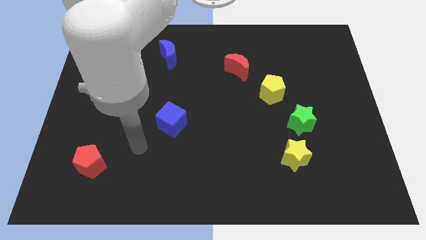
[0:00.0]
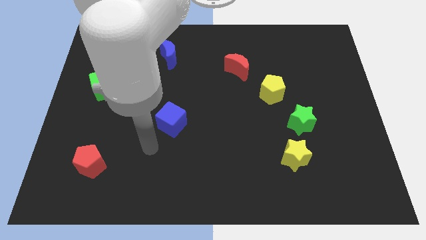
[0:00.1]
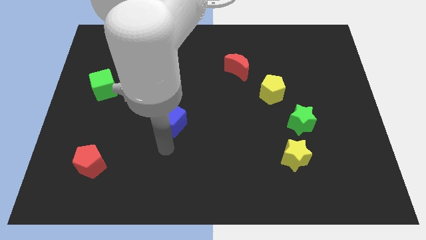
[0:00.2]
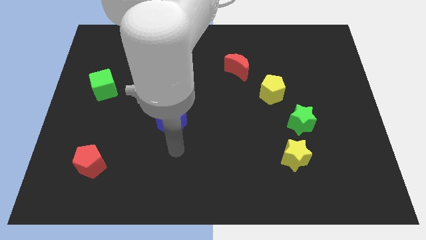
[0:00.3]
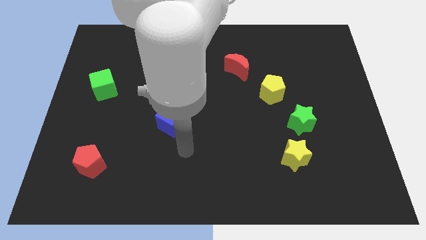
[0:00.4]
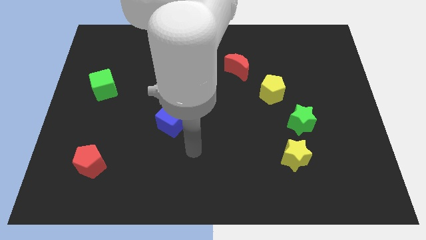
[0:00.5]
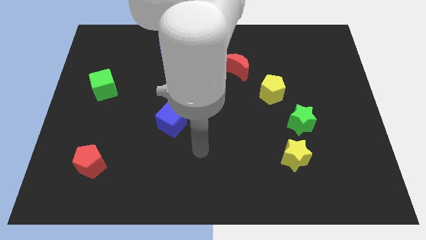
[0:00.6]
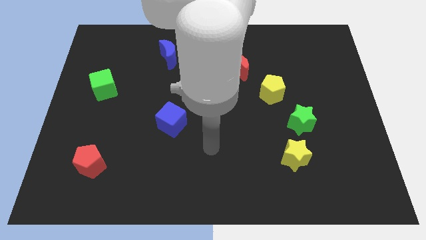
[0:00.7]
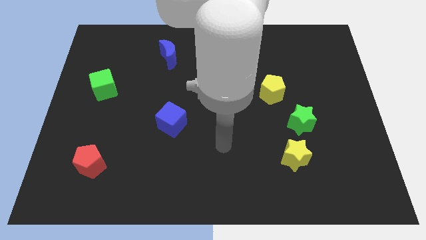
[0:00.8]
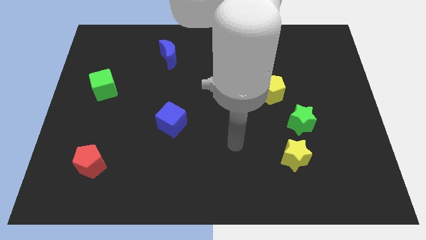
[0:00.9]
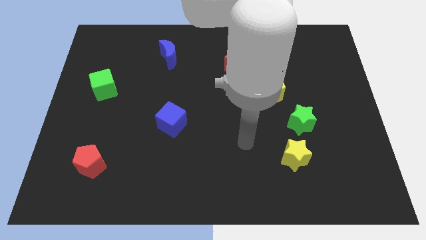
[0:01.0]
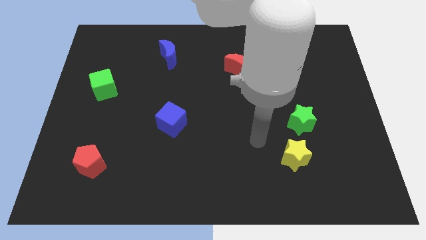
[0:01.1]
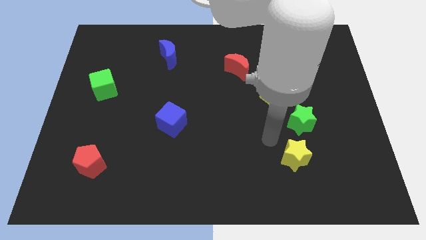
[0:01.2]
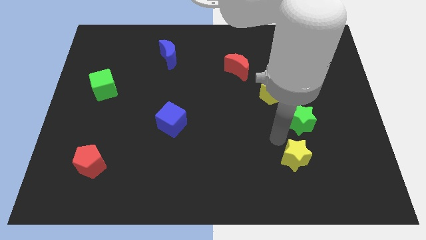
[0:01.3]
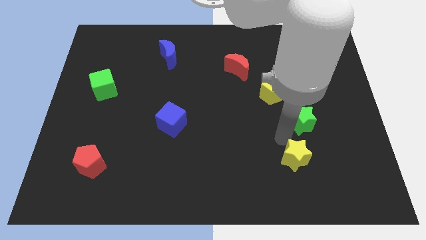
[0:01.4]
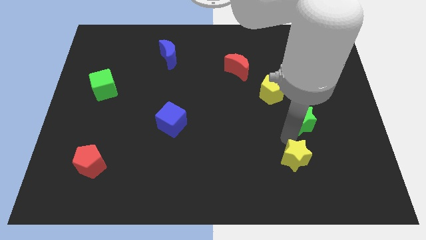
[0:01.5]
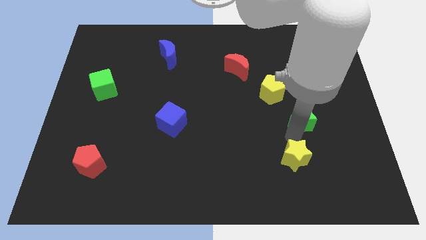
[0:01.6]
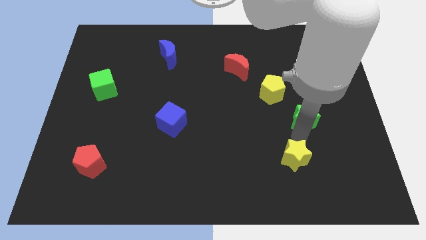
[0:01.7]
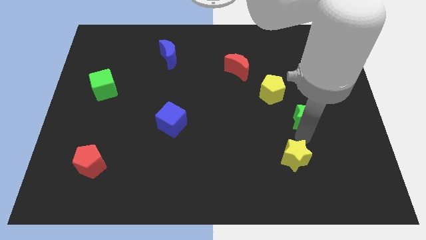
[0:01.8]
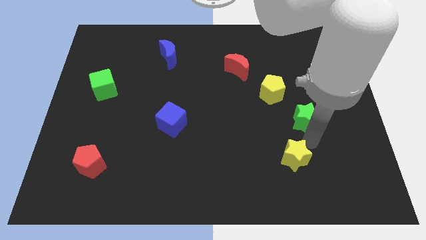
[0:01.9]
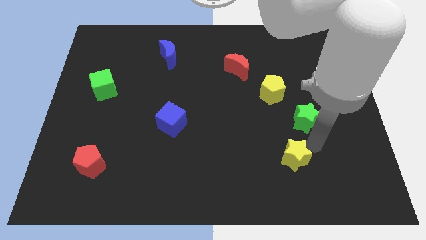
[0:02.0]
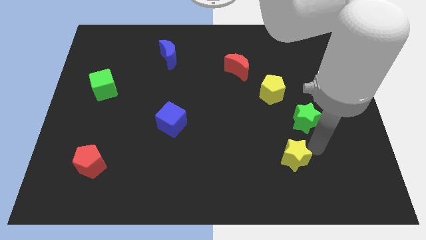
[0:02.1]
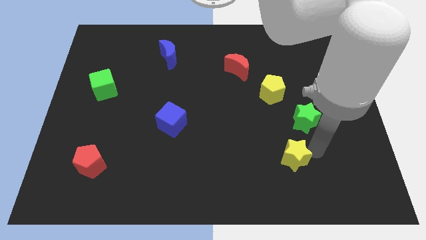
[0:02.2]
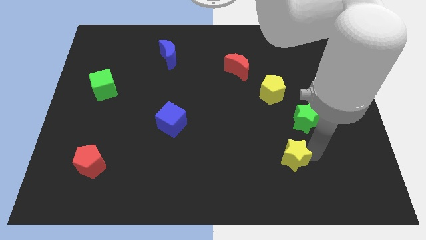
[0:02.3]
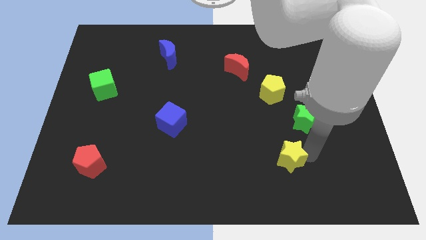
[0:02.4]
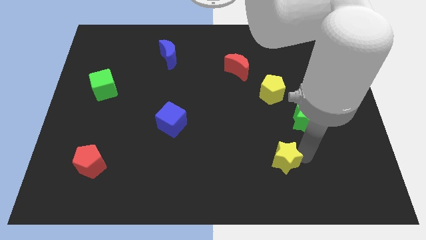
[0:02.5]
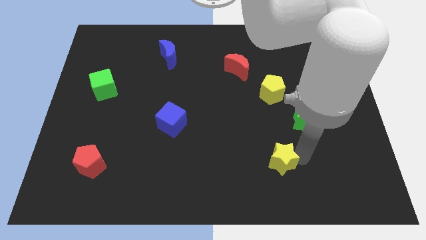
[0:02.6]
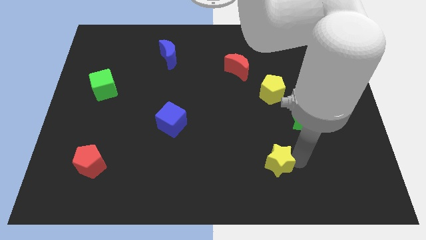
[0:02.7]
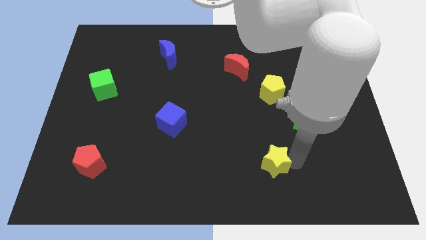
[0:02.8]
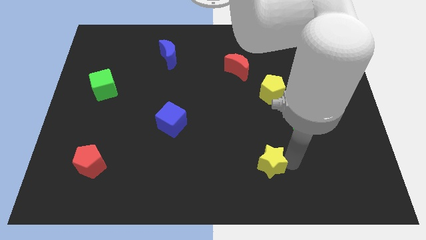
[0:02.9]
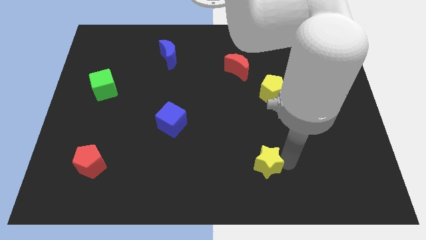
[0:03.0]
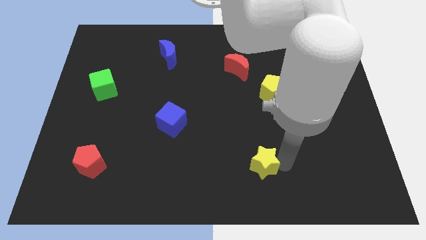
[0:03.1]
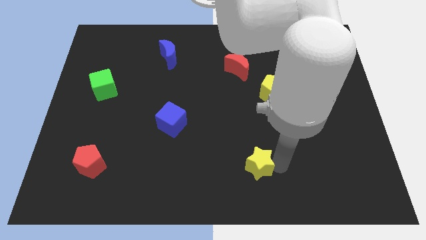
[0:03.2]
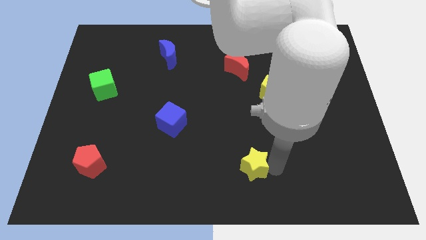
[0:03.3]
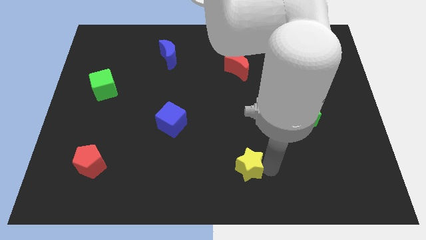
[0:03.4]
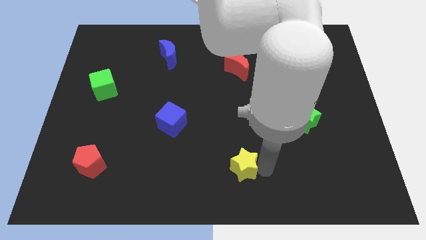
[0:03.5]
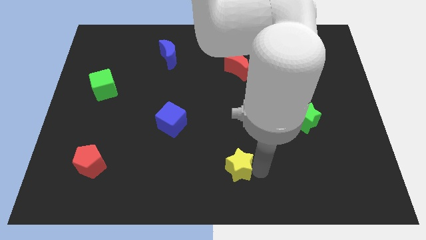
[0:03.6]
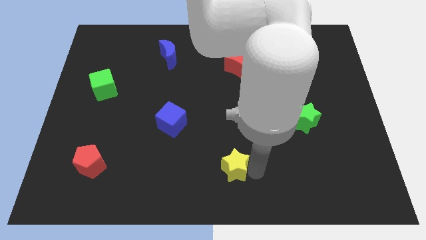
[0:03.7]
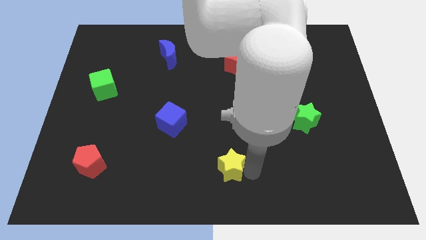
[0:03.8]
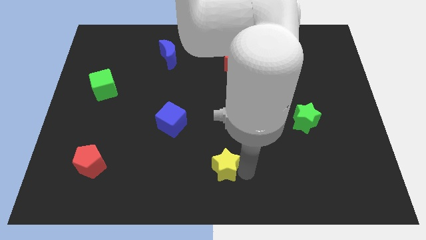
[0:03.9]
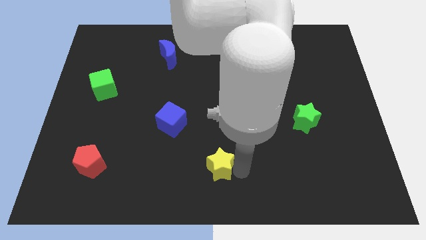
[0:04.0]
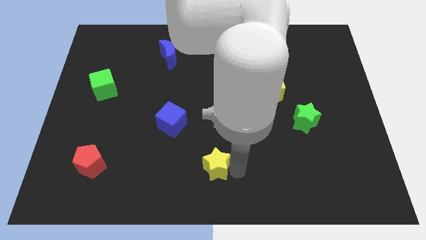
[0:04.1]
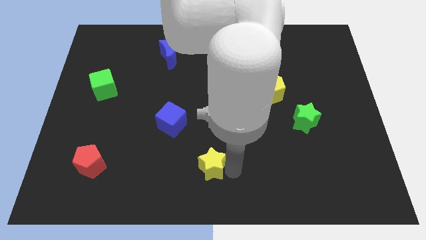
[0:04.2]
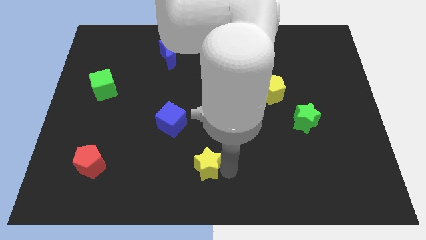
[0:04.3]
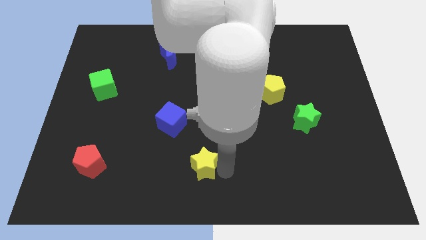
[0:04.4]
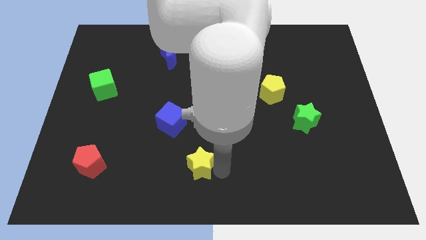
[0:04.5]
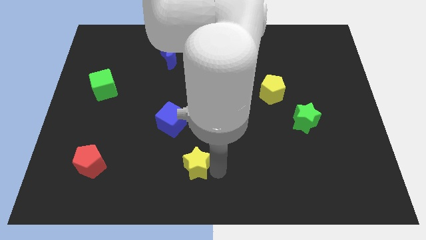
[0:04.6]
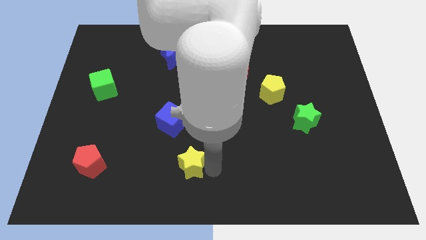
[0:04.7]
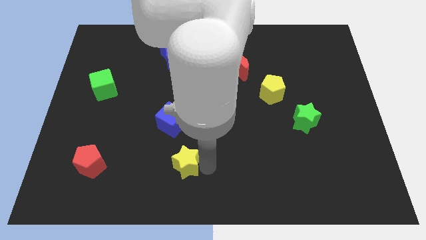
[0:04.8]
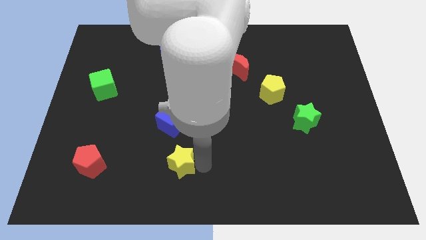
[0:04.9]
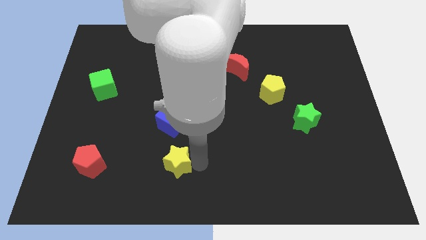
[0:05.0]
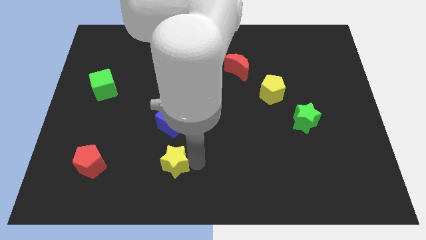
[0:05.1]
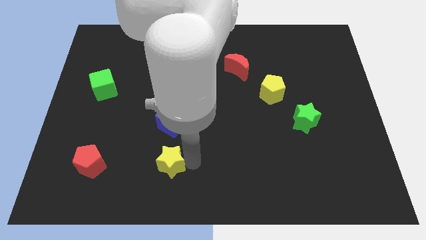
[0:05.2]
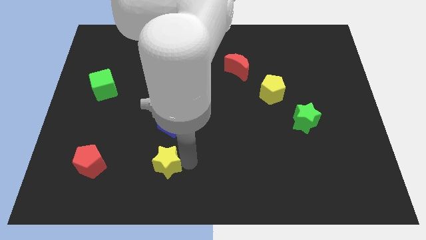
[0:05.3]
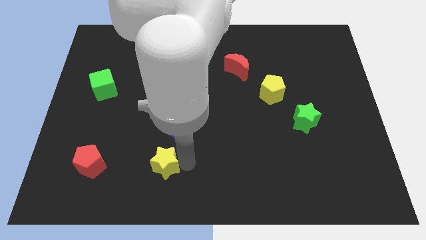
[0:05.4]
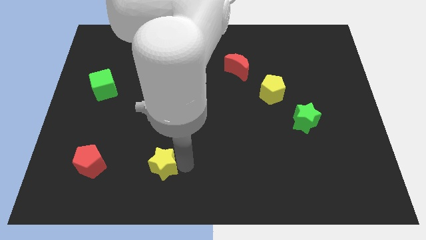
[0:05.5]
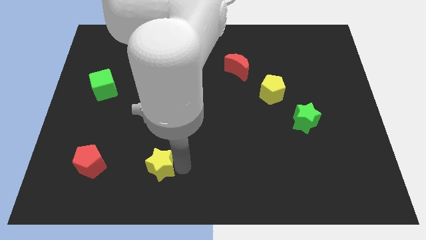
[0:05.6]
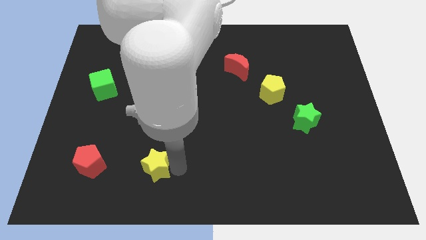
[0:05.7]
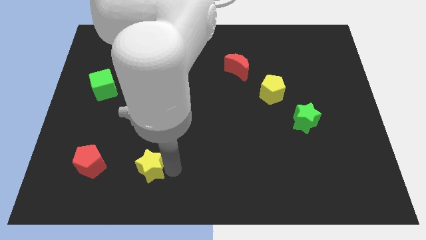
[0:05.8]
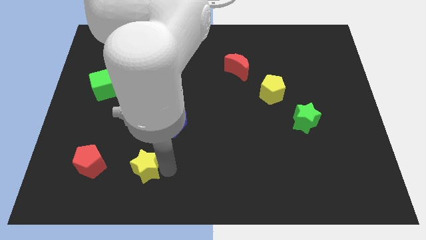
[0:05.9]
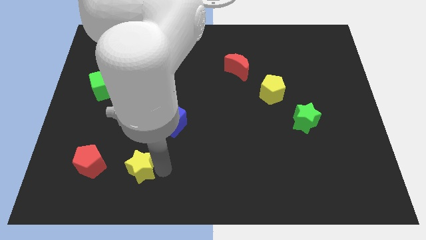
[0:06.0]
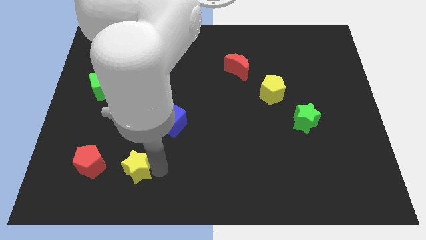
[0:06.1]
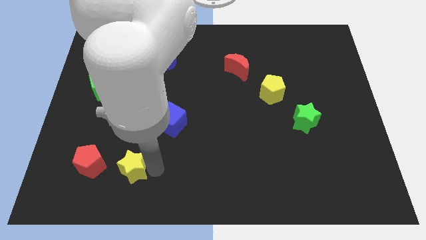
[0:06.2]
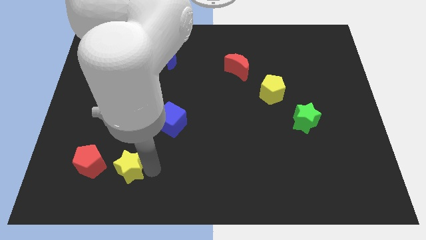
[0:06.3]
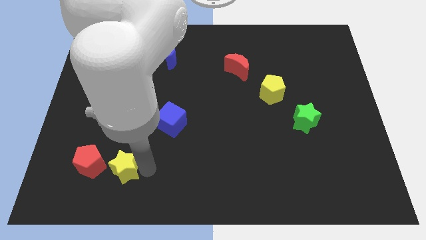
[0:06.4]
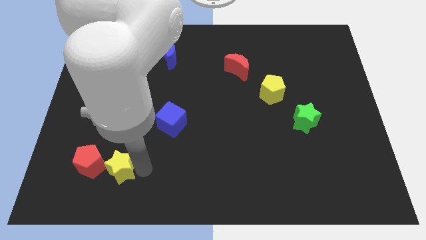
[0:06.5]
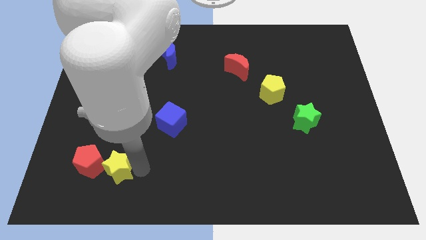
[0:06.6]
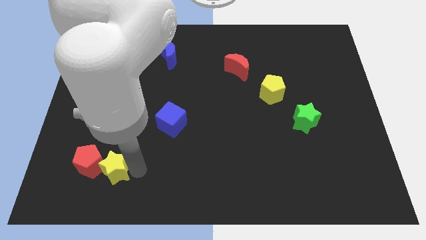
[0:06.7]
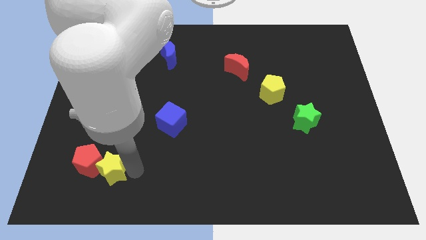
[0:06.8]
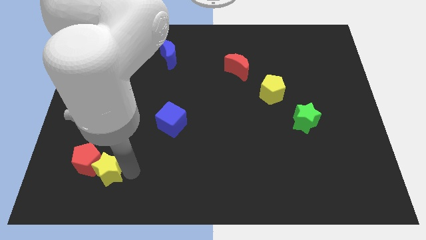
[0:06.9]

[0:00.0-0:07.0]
slide the yellow star towards the red pentagon

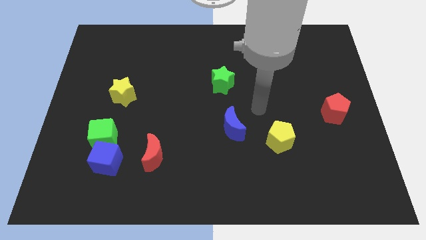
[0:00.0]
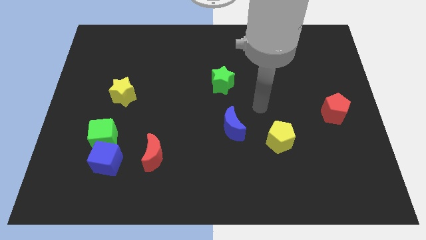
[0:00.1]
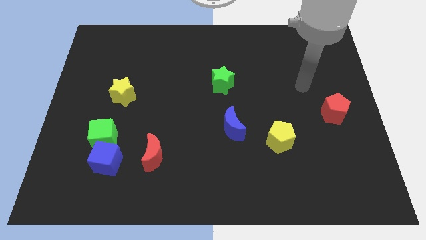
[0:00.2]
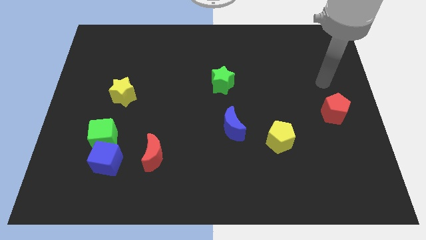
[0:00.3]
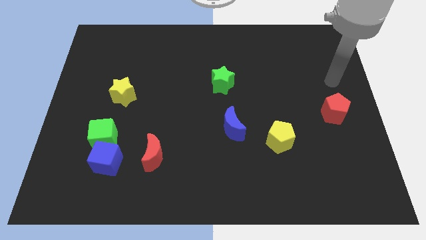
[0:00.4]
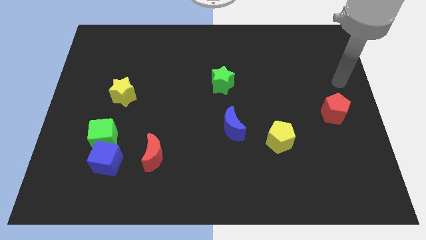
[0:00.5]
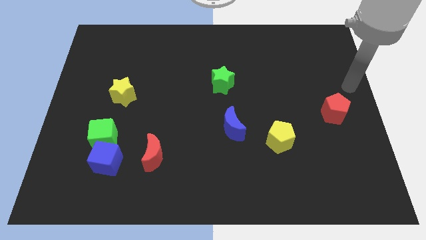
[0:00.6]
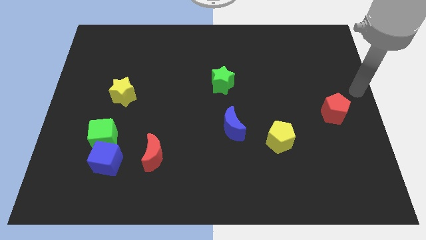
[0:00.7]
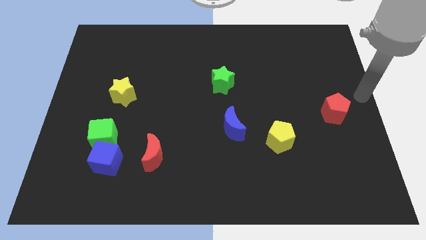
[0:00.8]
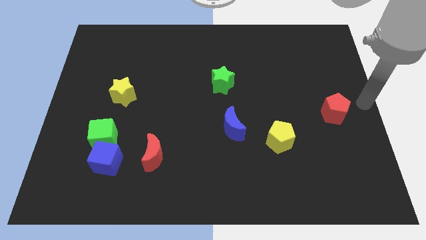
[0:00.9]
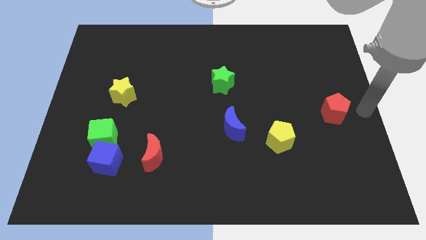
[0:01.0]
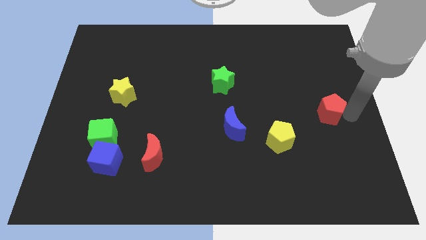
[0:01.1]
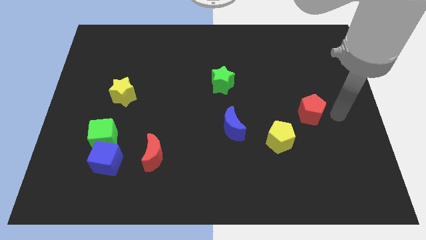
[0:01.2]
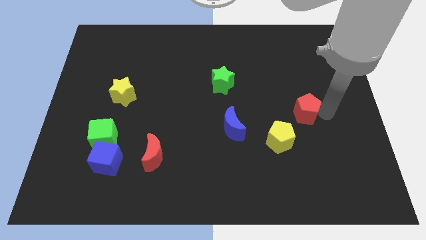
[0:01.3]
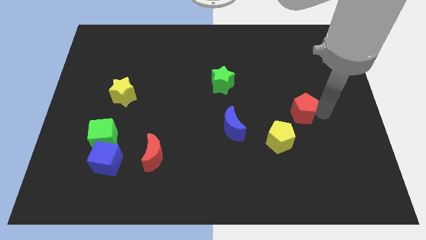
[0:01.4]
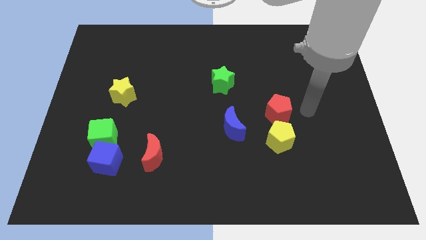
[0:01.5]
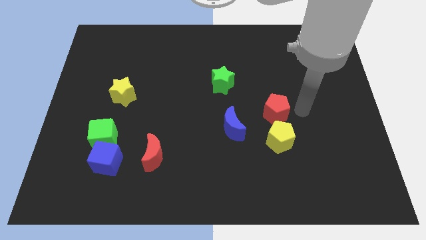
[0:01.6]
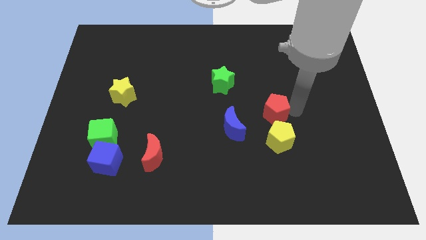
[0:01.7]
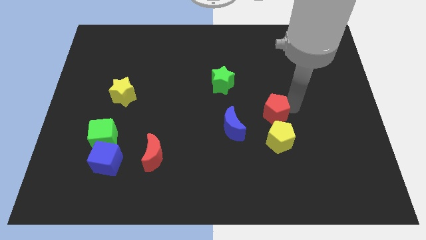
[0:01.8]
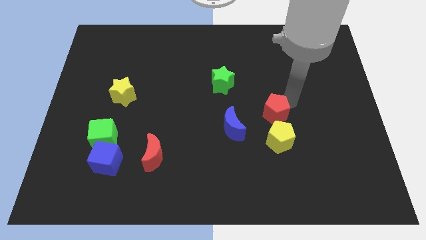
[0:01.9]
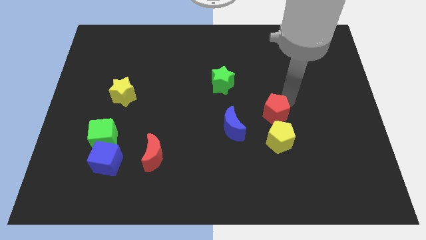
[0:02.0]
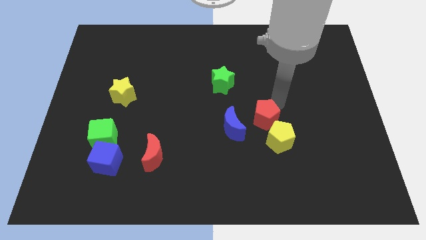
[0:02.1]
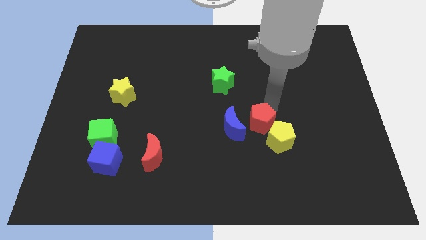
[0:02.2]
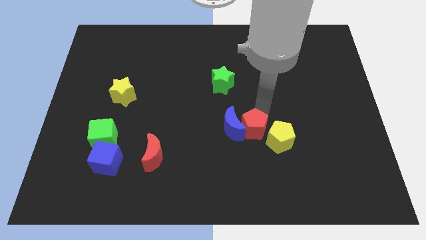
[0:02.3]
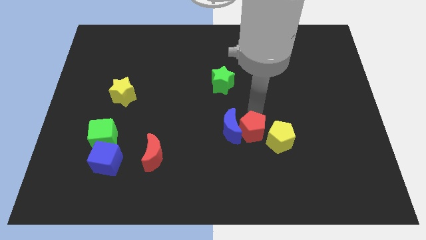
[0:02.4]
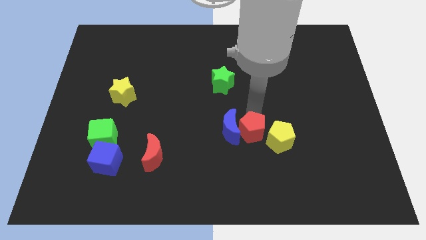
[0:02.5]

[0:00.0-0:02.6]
move the red pentagon next to the blue moon
